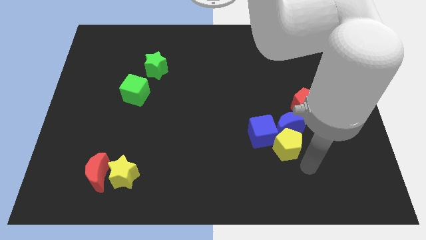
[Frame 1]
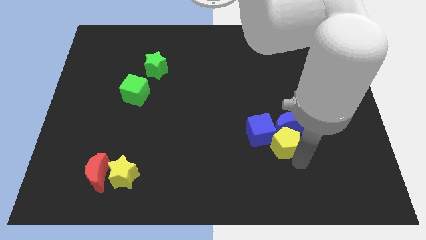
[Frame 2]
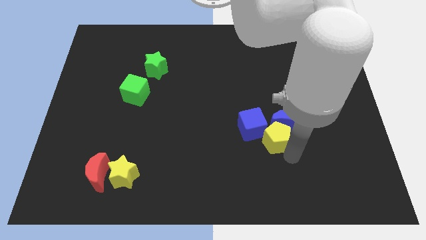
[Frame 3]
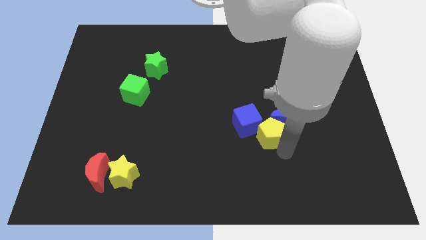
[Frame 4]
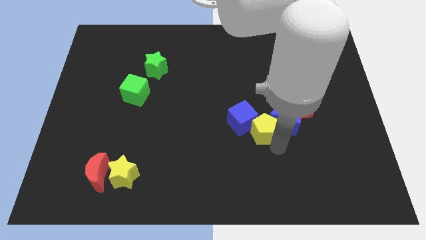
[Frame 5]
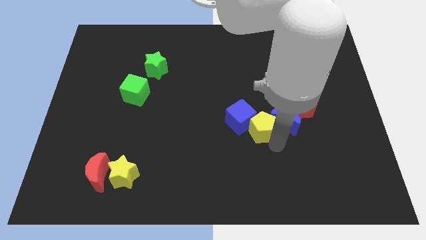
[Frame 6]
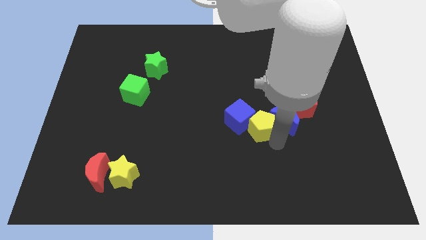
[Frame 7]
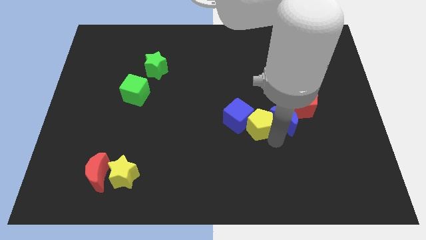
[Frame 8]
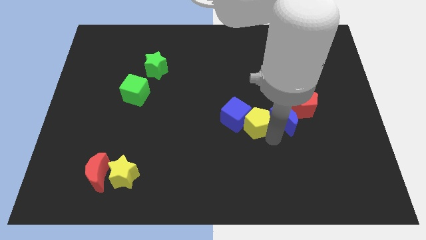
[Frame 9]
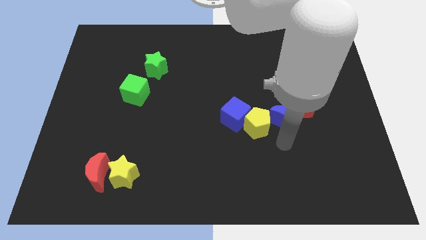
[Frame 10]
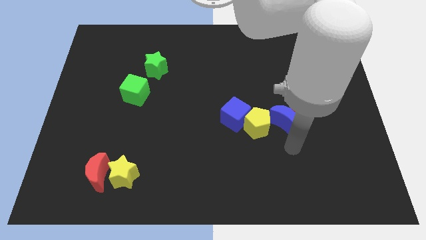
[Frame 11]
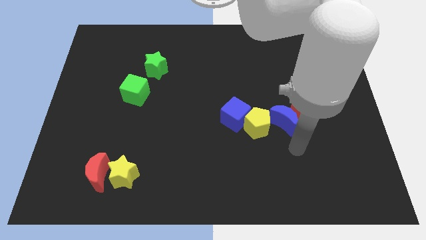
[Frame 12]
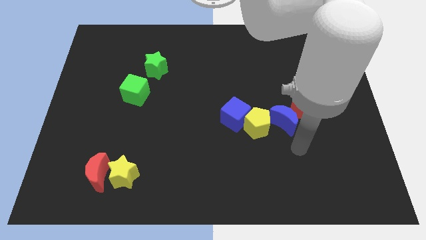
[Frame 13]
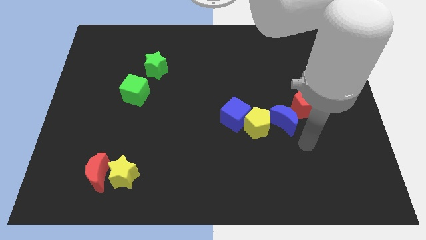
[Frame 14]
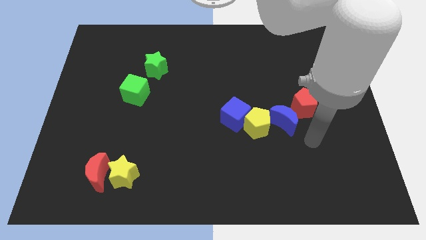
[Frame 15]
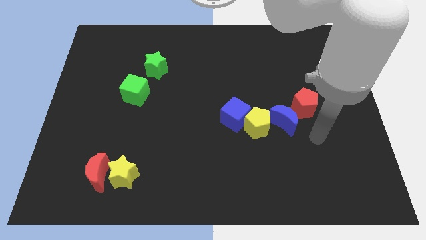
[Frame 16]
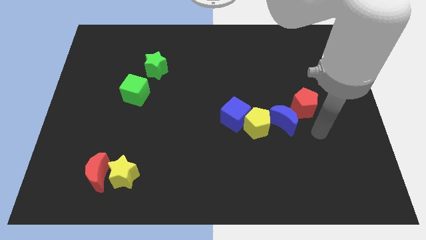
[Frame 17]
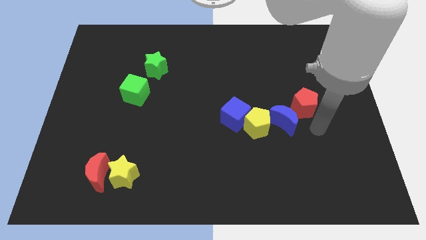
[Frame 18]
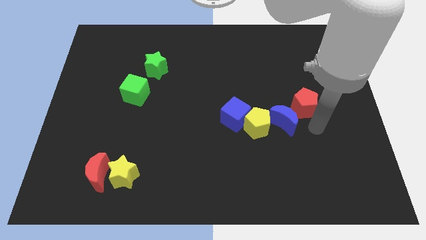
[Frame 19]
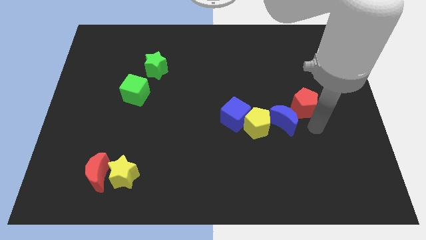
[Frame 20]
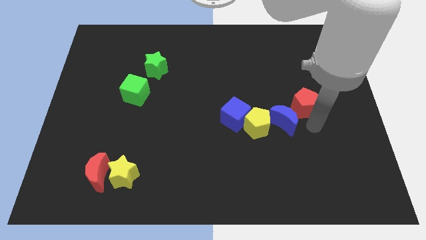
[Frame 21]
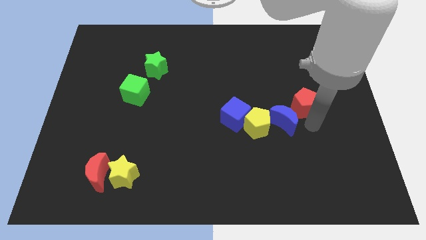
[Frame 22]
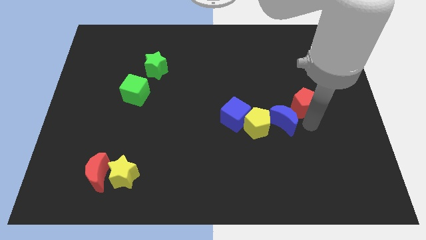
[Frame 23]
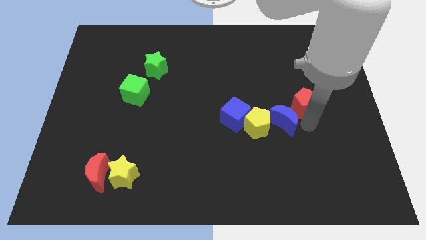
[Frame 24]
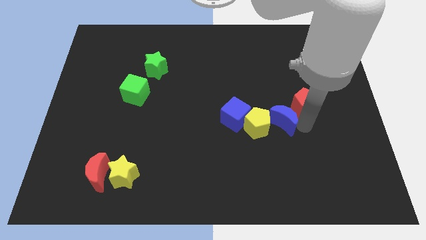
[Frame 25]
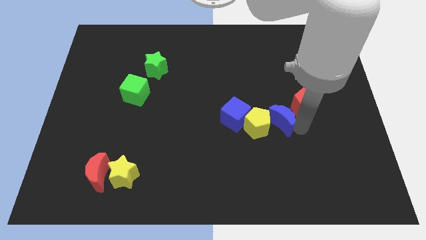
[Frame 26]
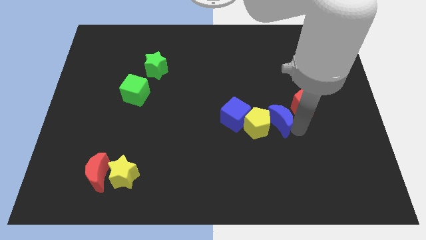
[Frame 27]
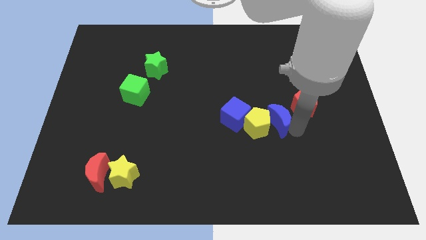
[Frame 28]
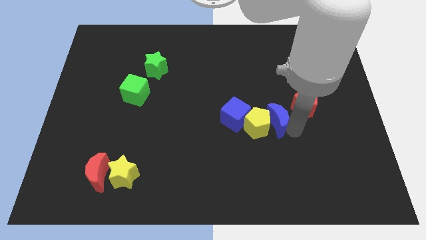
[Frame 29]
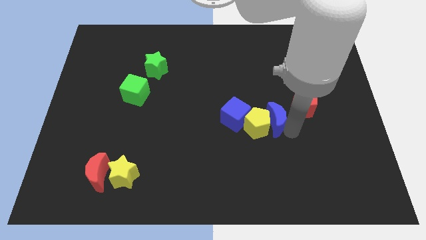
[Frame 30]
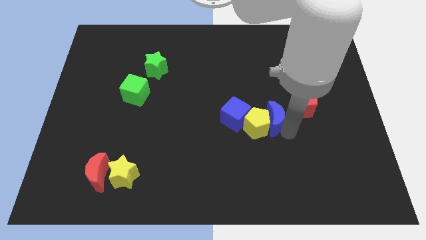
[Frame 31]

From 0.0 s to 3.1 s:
push the yellow pentagon into the blue cube and blue crescent

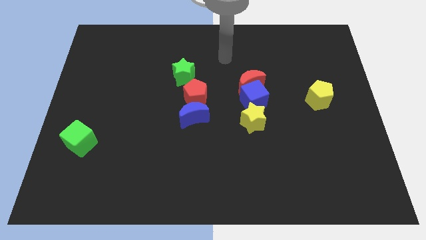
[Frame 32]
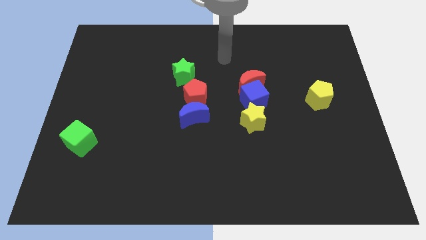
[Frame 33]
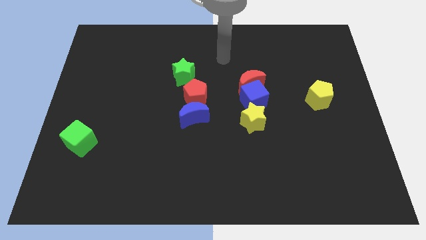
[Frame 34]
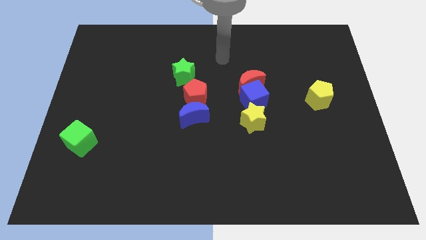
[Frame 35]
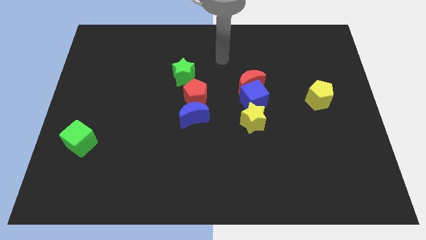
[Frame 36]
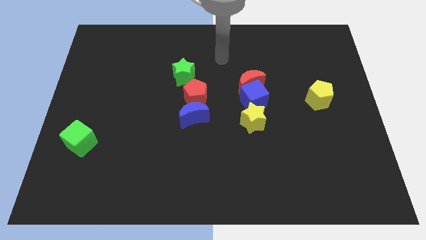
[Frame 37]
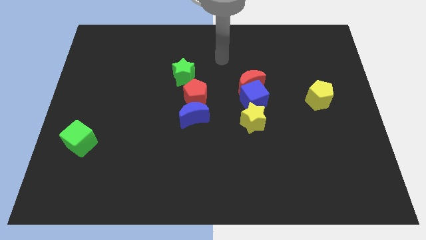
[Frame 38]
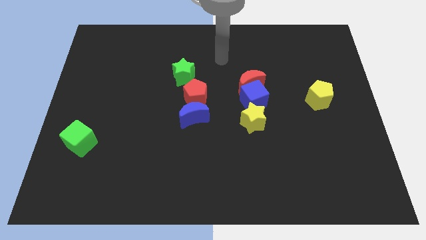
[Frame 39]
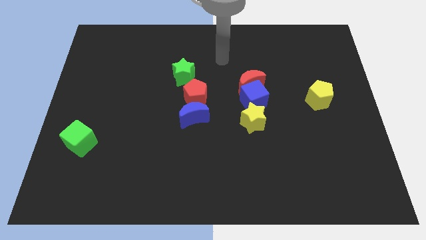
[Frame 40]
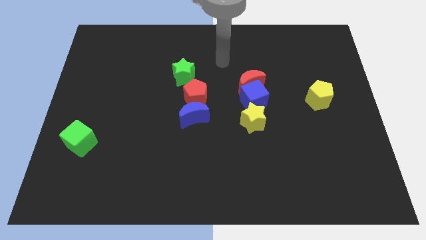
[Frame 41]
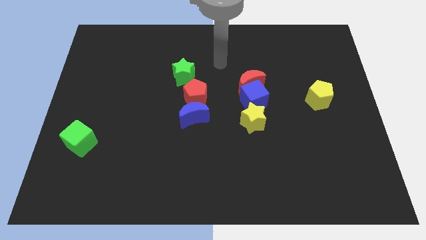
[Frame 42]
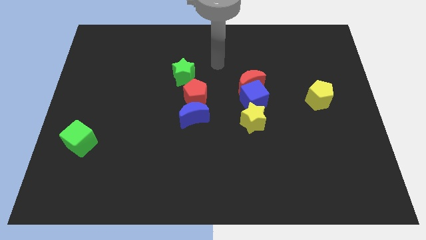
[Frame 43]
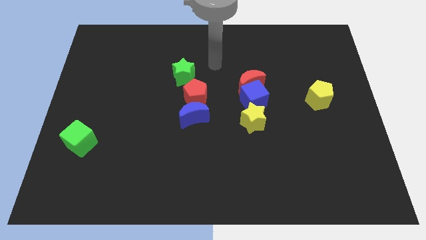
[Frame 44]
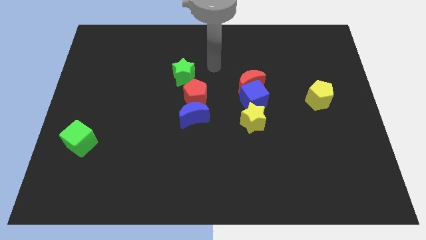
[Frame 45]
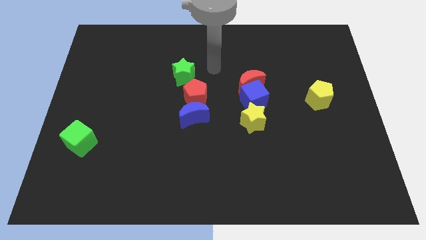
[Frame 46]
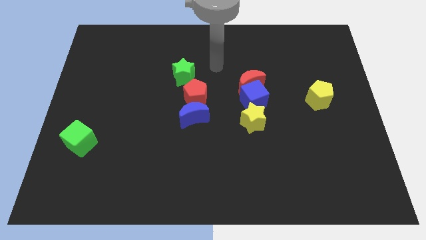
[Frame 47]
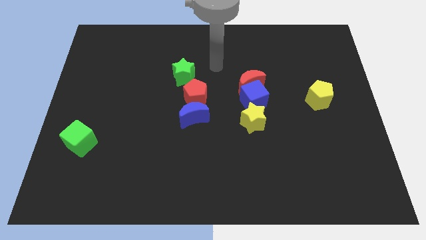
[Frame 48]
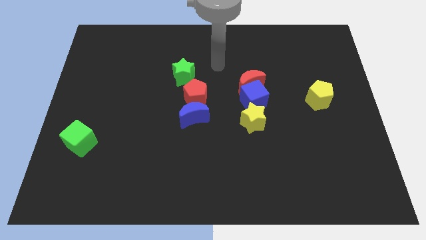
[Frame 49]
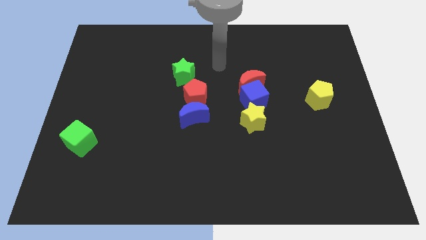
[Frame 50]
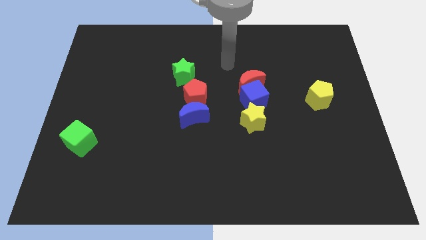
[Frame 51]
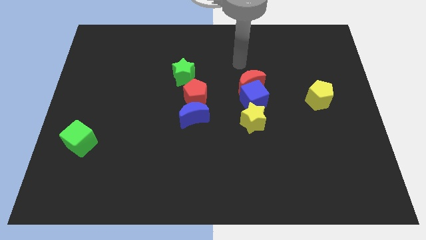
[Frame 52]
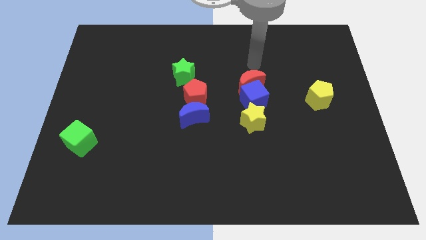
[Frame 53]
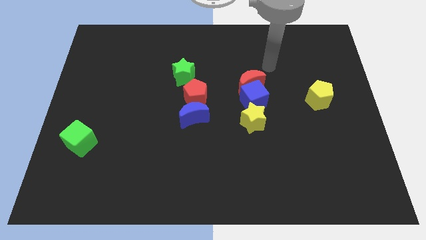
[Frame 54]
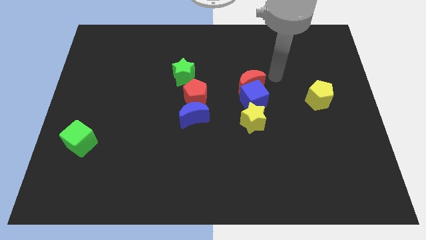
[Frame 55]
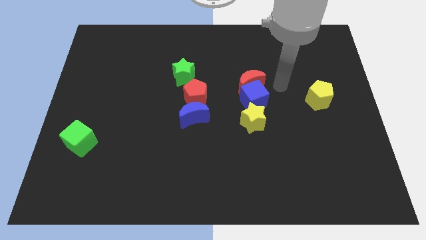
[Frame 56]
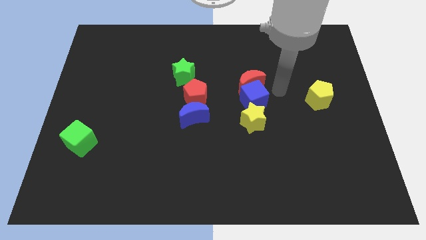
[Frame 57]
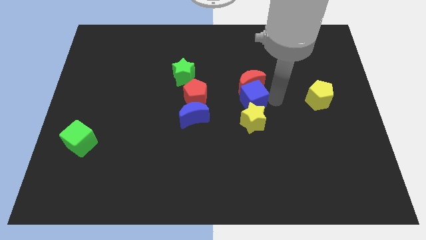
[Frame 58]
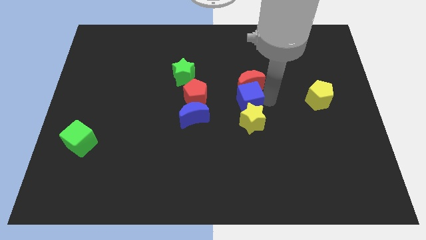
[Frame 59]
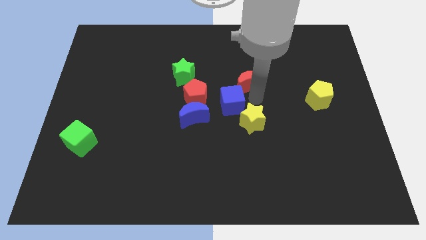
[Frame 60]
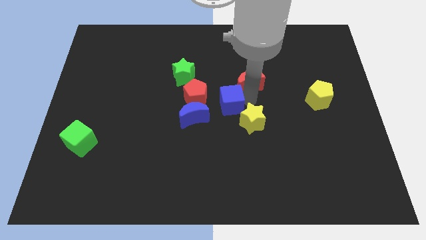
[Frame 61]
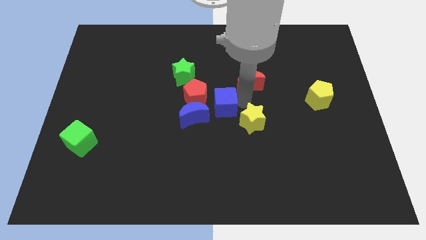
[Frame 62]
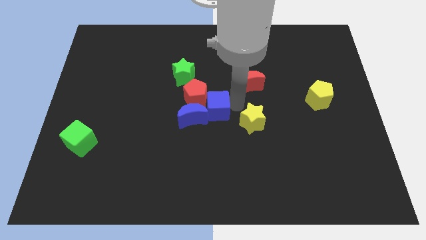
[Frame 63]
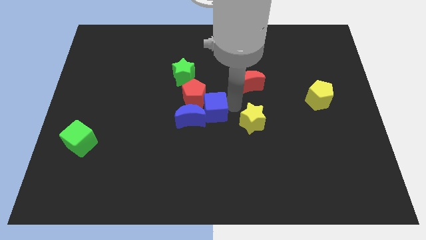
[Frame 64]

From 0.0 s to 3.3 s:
move the blue cube to the right side of the blue crescent

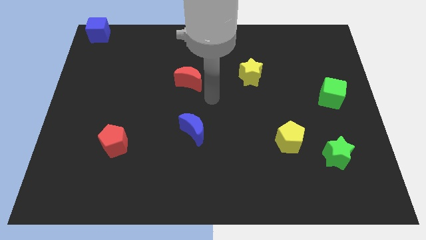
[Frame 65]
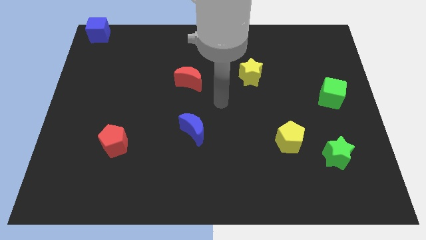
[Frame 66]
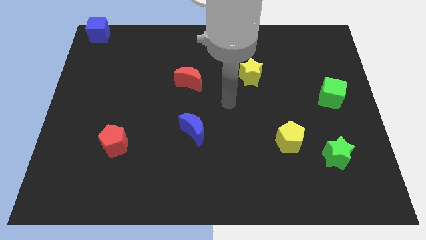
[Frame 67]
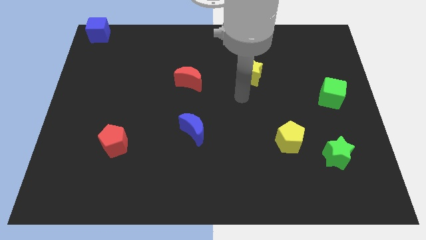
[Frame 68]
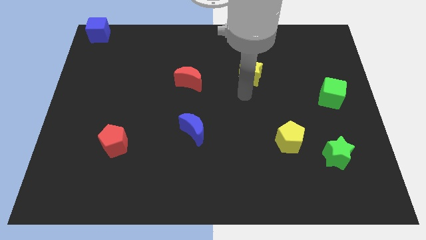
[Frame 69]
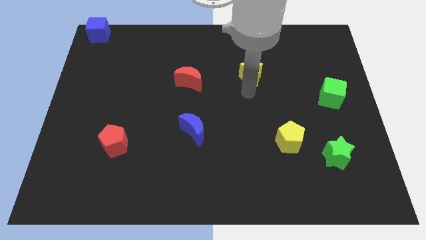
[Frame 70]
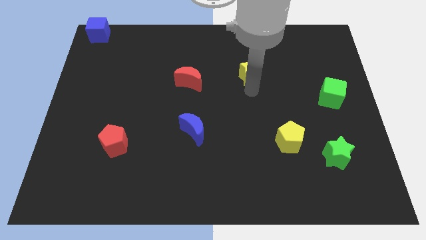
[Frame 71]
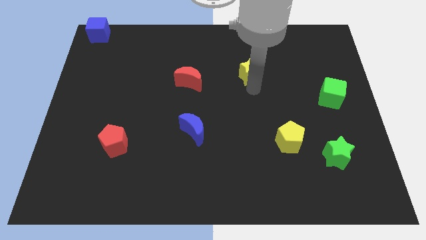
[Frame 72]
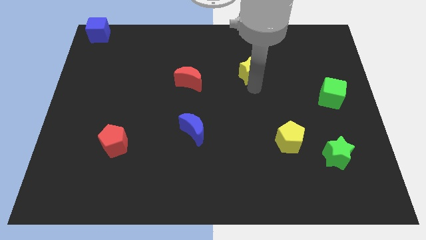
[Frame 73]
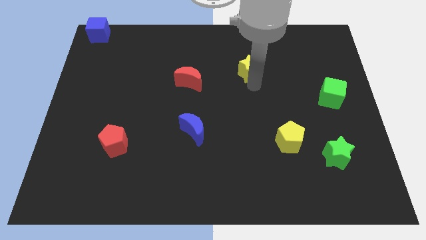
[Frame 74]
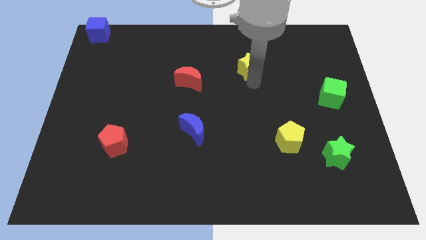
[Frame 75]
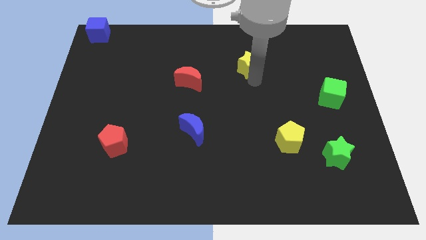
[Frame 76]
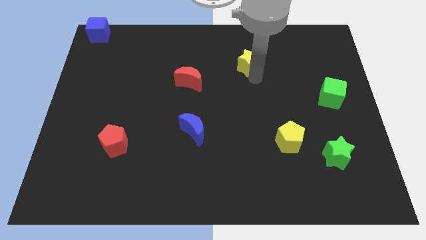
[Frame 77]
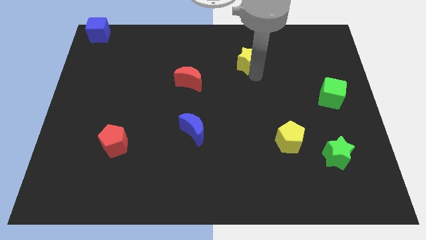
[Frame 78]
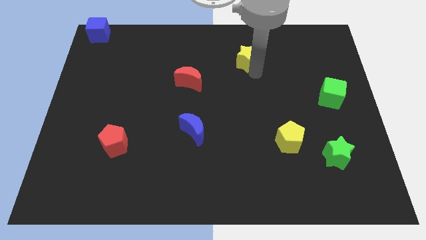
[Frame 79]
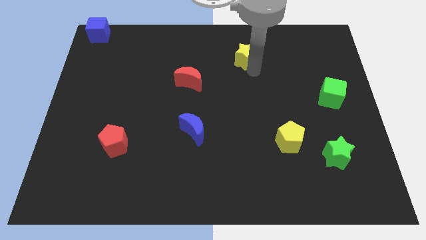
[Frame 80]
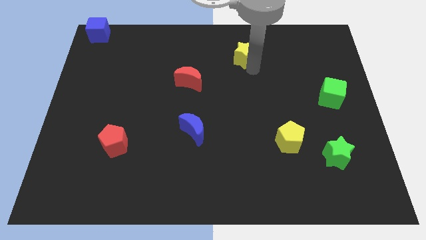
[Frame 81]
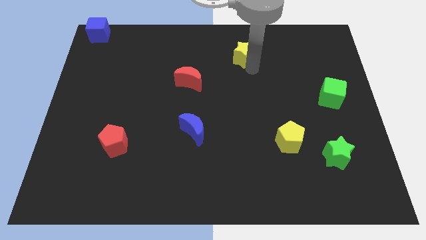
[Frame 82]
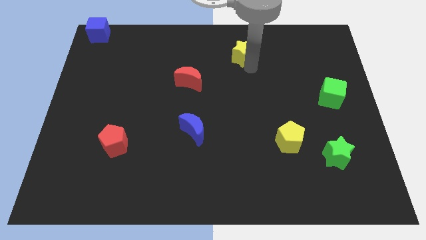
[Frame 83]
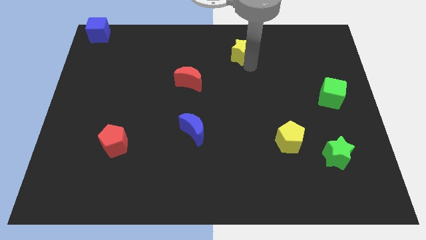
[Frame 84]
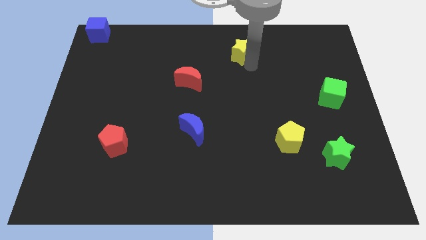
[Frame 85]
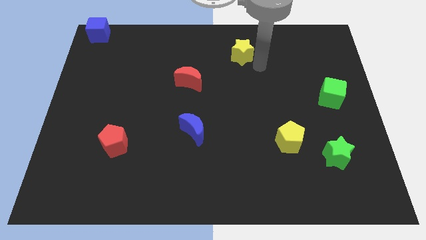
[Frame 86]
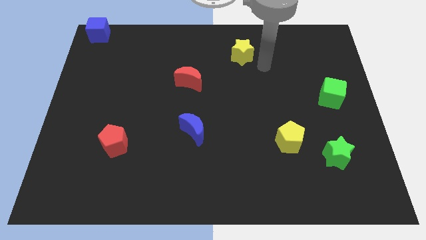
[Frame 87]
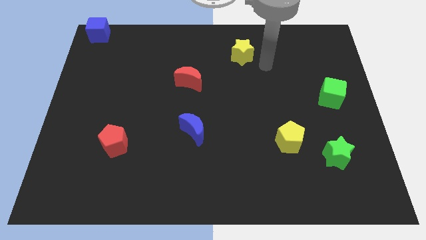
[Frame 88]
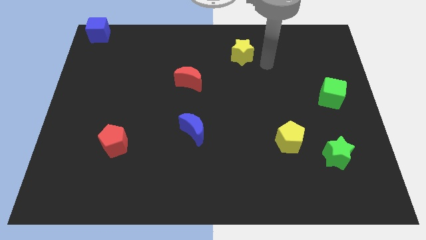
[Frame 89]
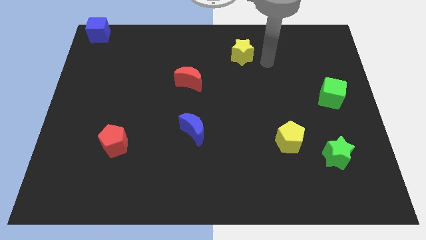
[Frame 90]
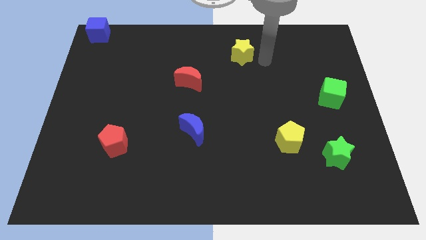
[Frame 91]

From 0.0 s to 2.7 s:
move the yellow star diagonal above blue moon
